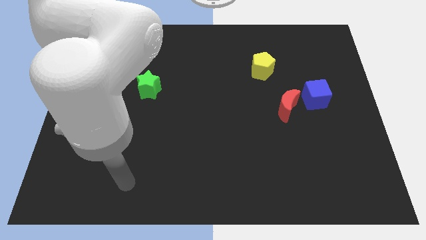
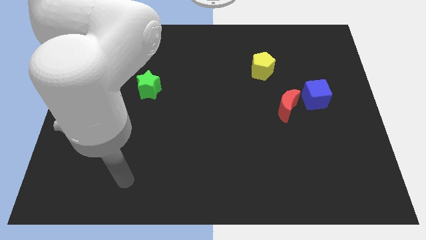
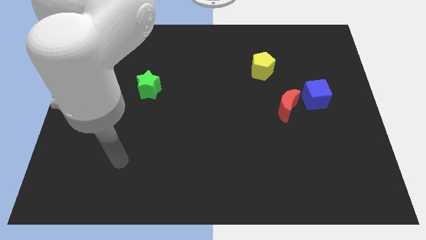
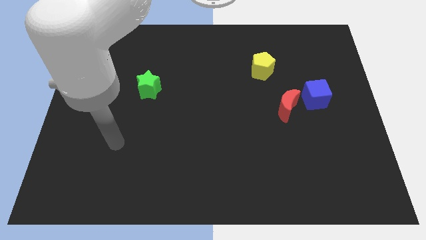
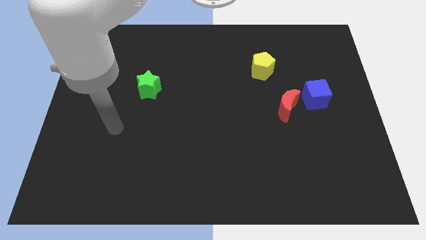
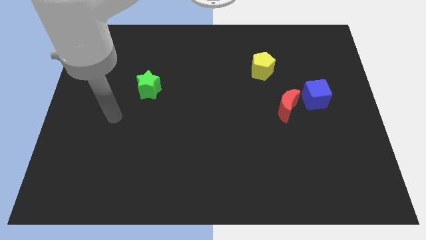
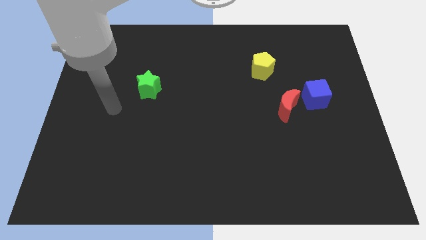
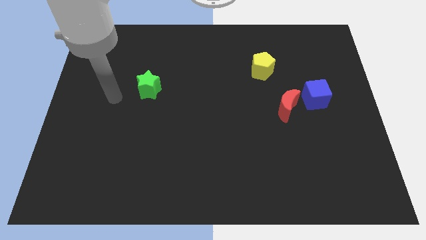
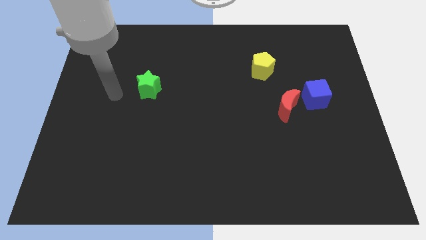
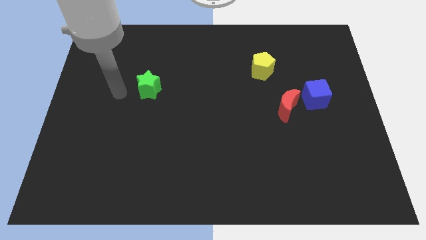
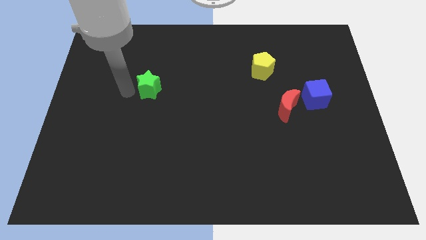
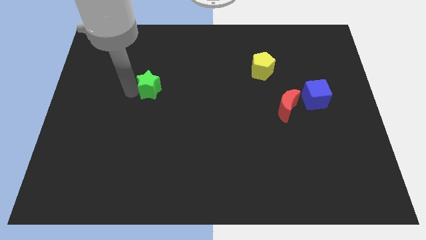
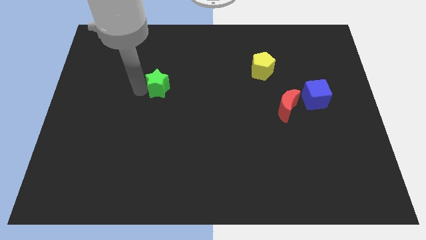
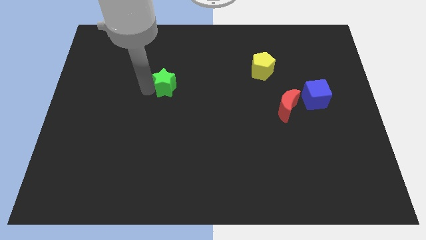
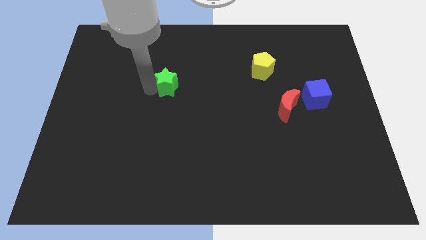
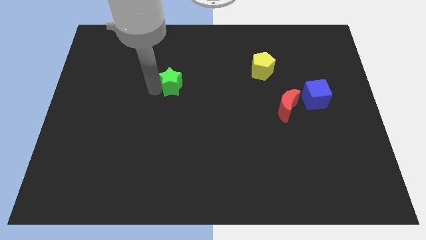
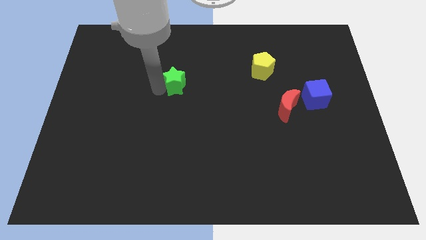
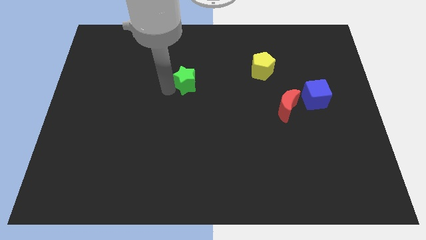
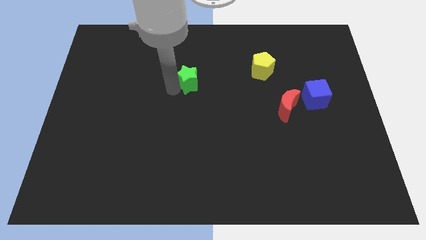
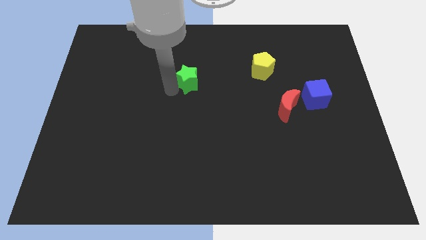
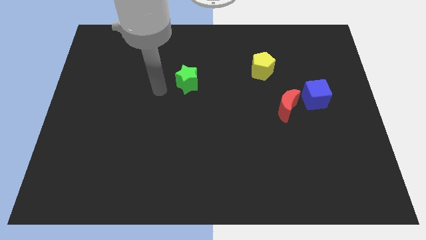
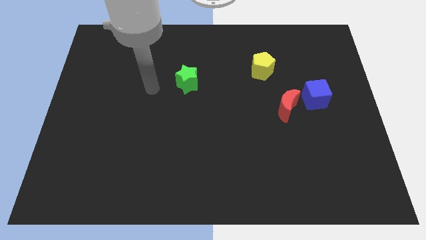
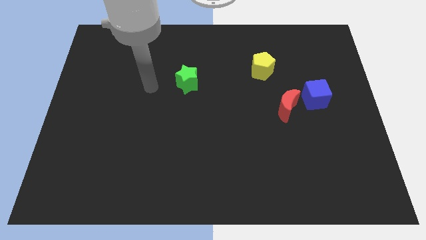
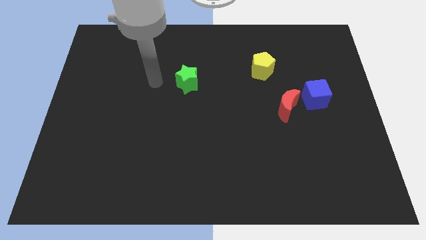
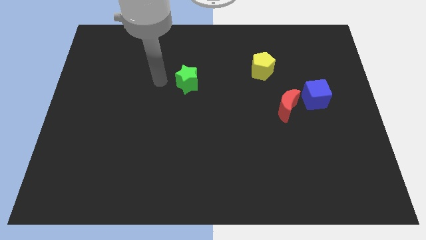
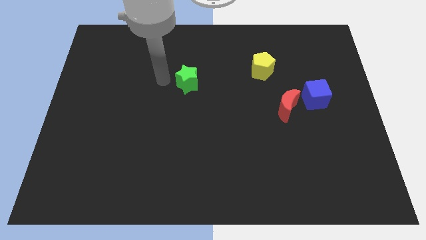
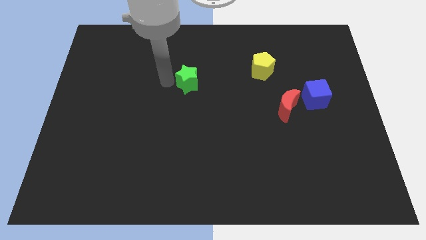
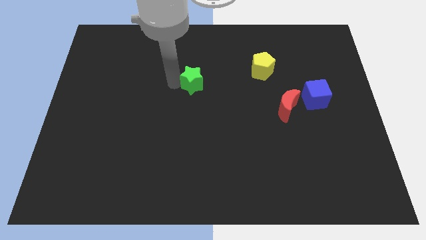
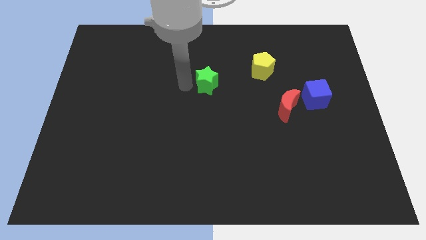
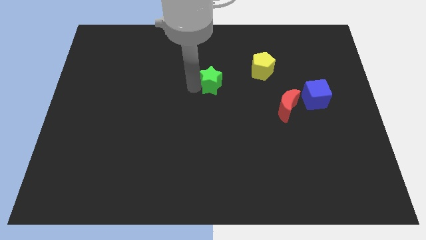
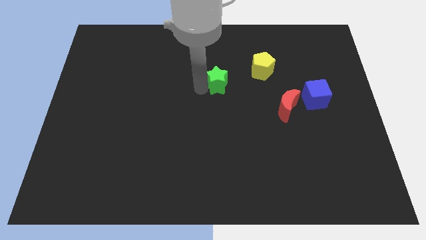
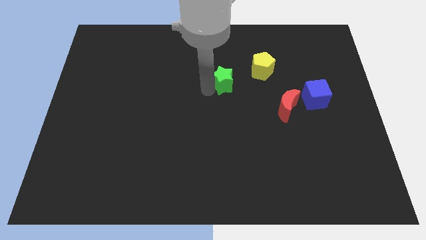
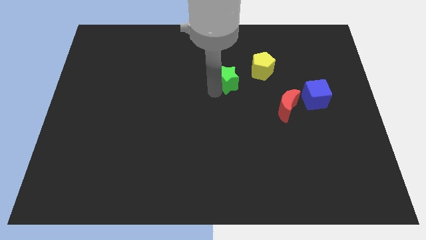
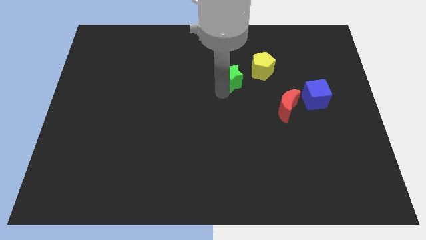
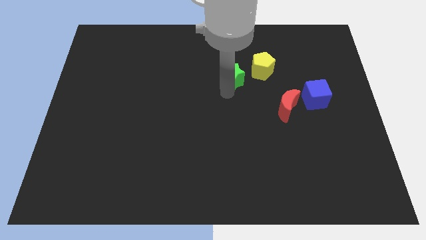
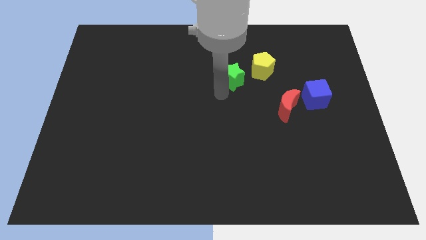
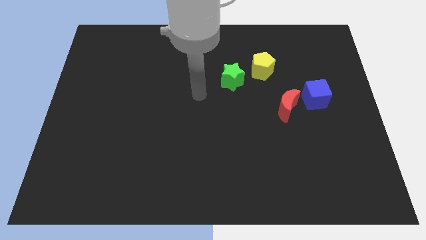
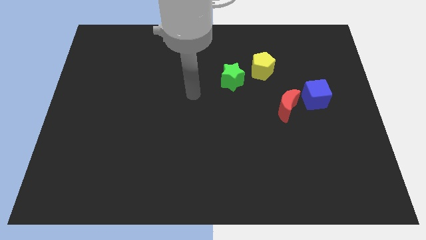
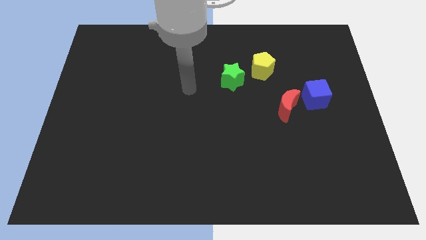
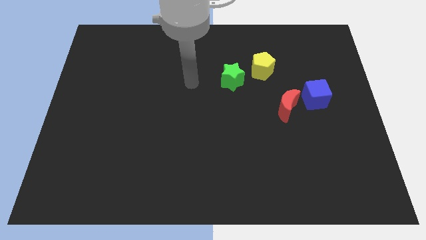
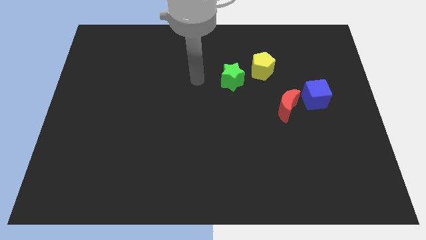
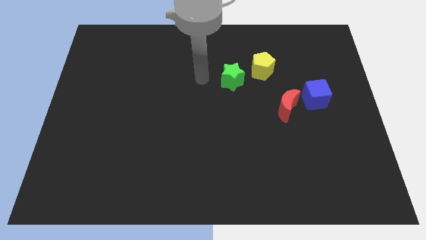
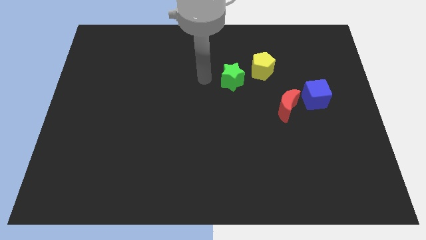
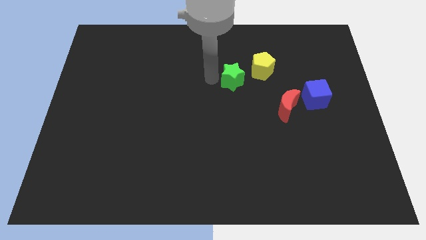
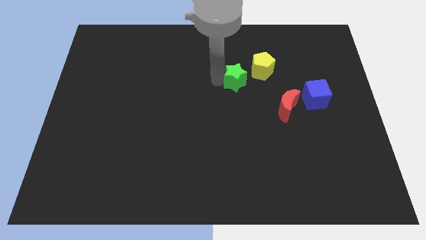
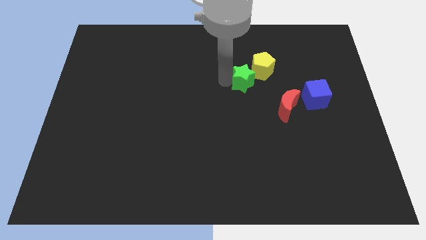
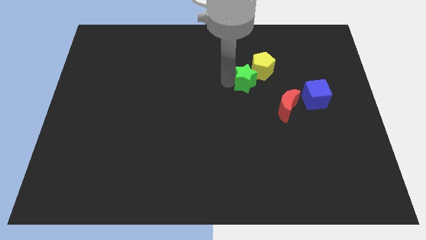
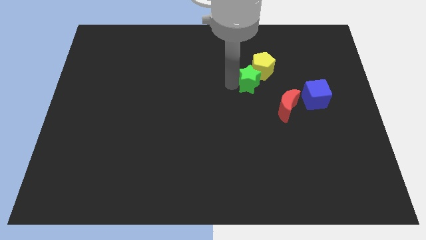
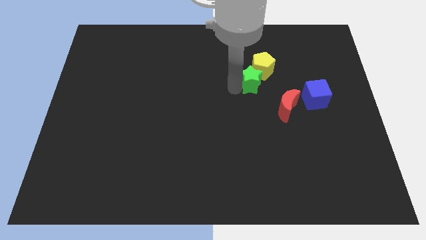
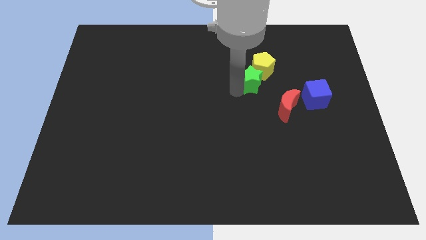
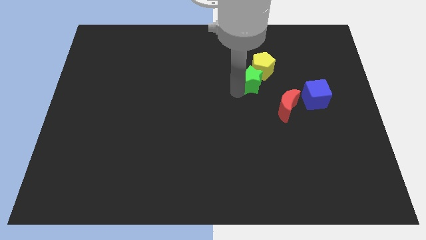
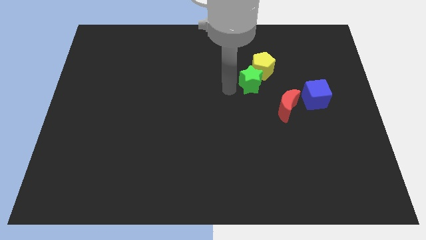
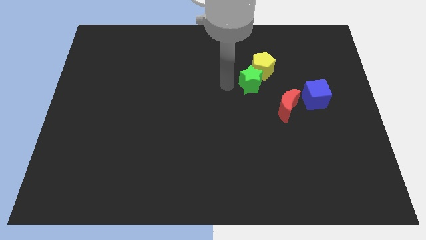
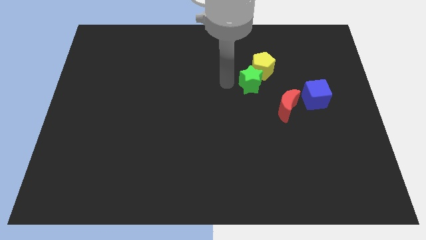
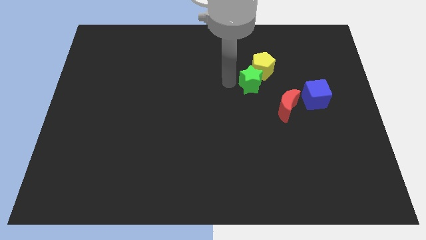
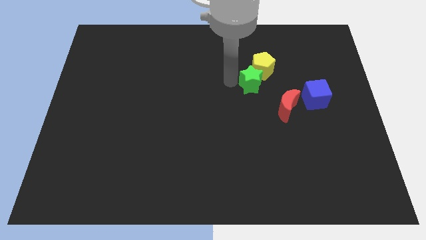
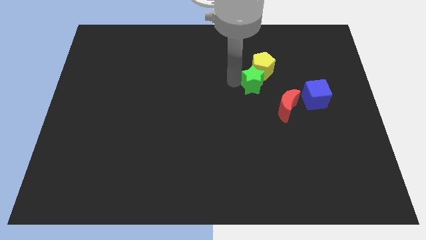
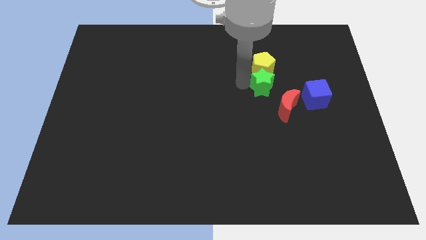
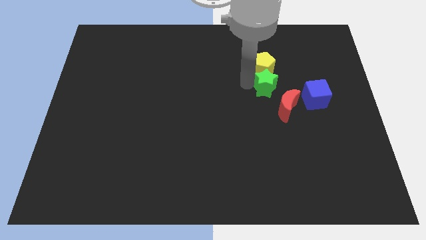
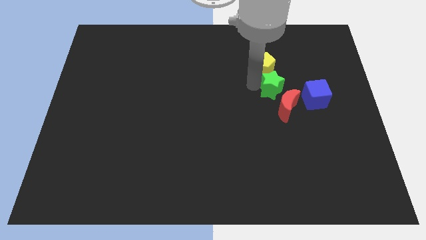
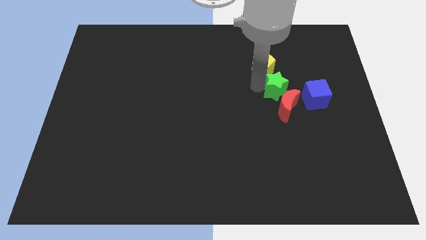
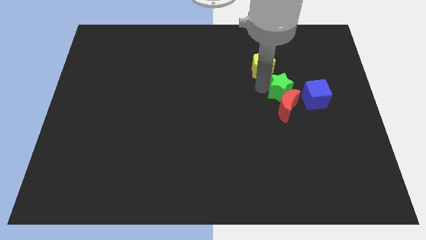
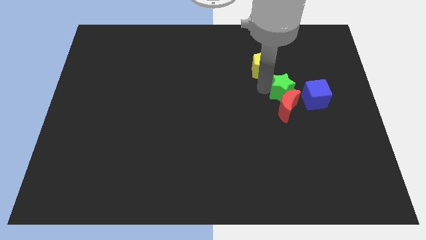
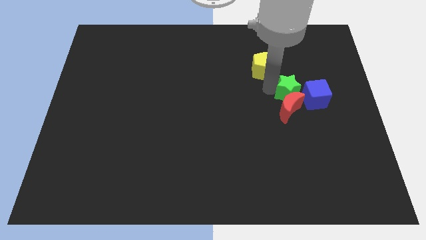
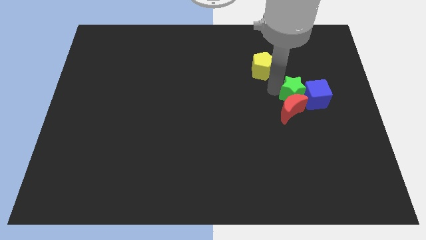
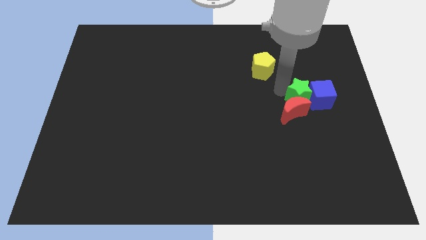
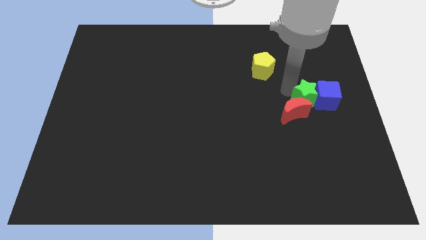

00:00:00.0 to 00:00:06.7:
move the green star close to the blue cube

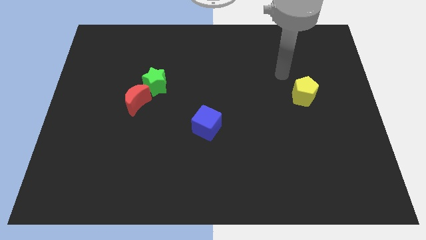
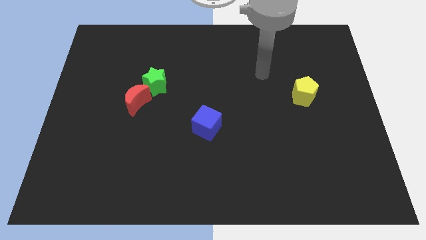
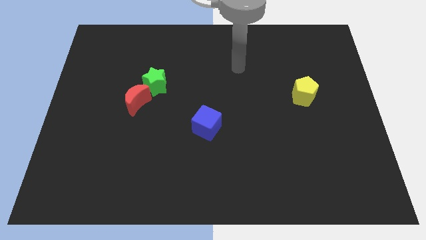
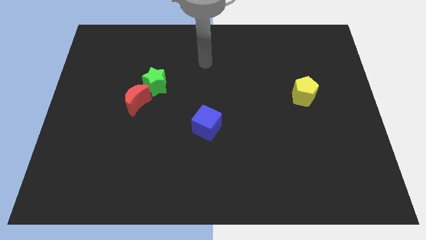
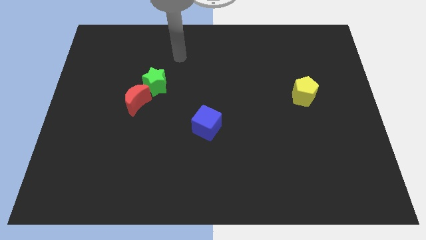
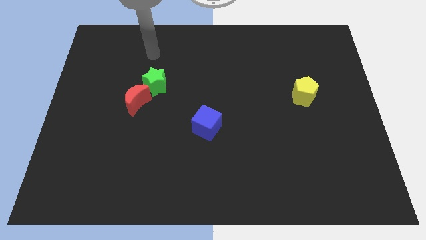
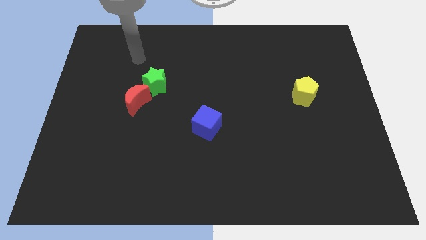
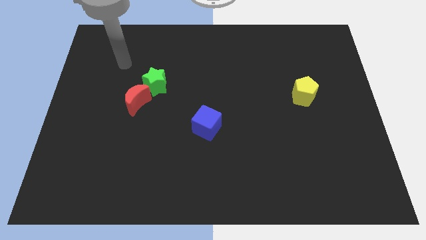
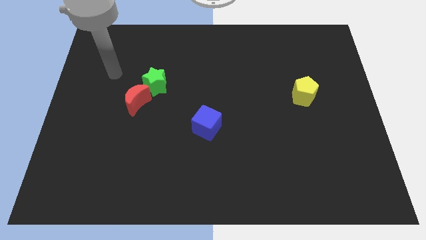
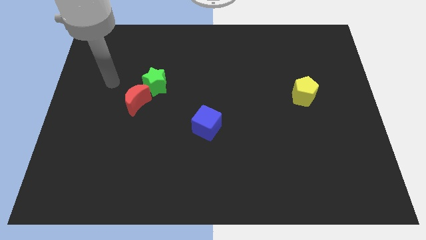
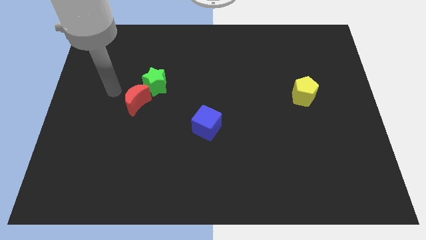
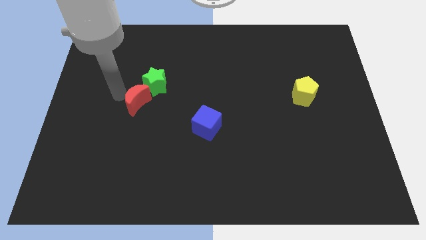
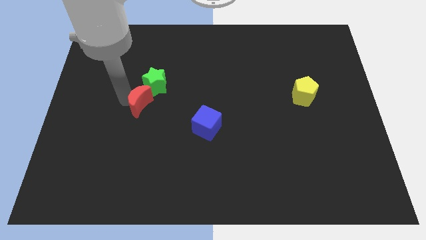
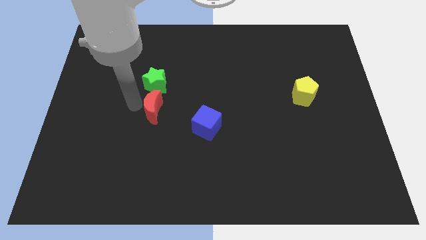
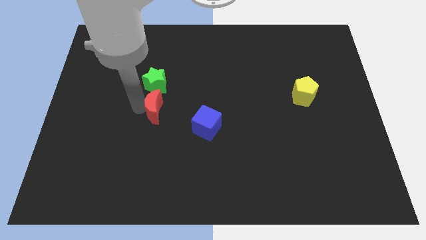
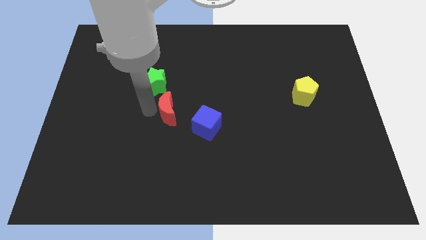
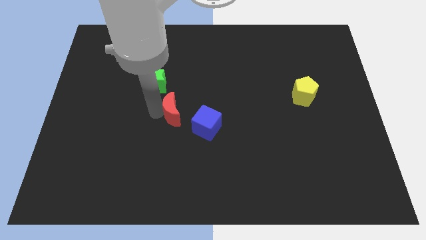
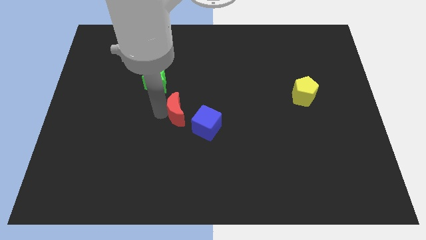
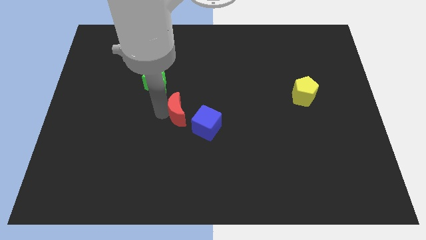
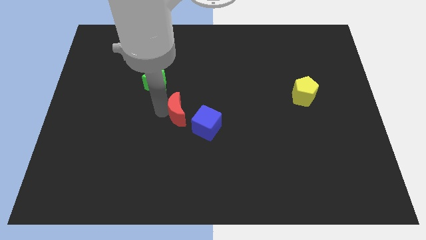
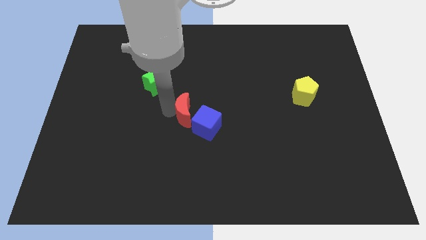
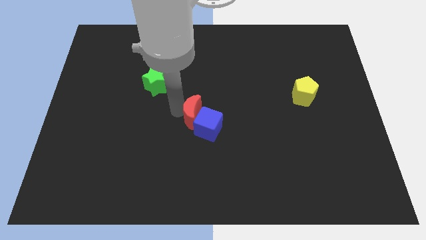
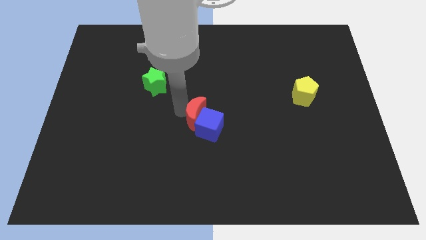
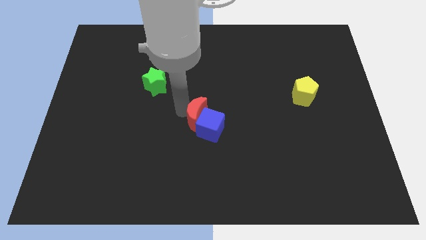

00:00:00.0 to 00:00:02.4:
push the red block to the cube
